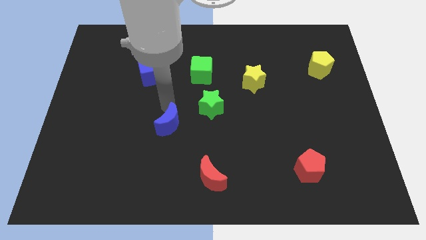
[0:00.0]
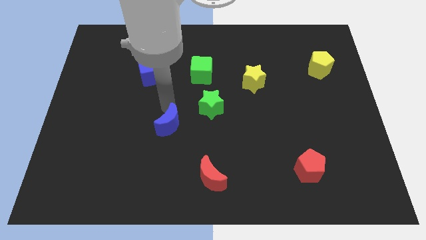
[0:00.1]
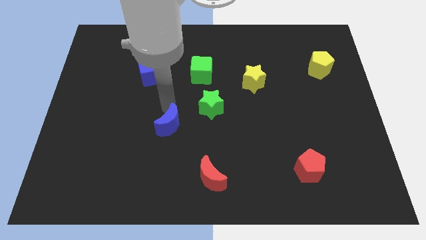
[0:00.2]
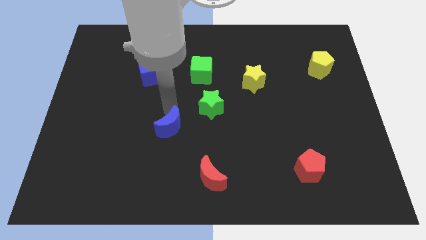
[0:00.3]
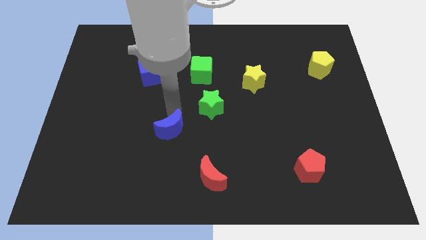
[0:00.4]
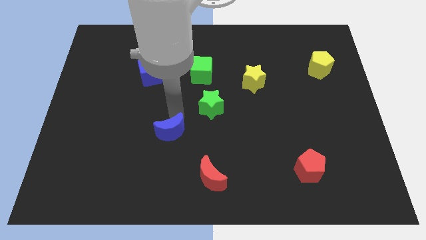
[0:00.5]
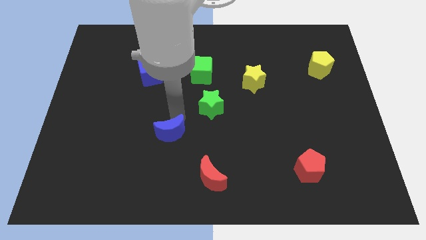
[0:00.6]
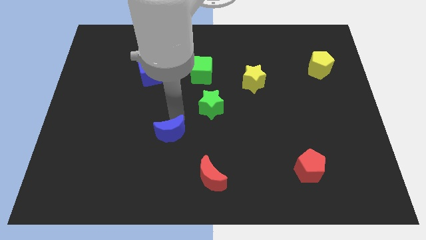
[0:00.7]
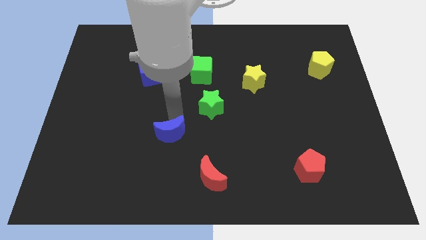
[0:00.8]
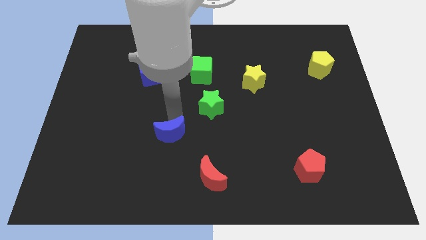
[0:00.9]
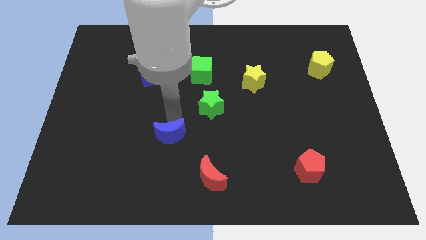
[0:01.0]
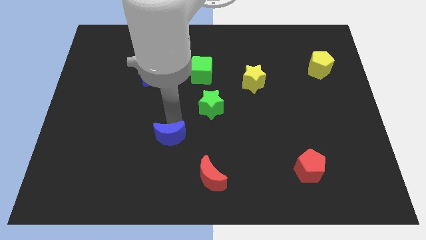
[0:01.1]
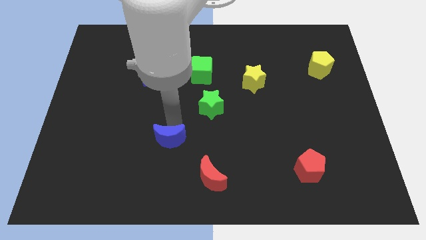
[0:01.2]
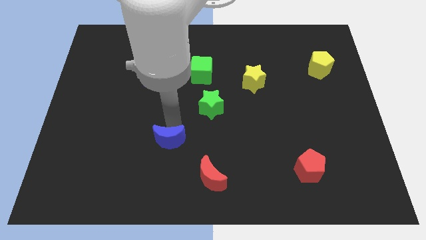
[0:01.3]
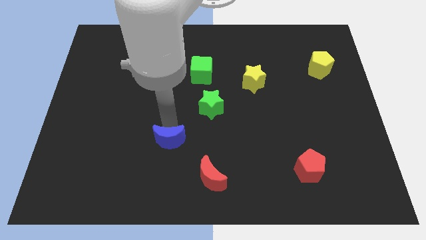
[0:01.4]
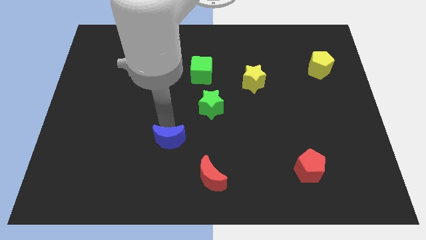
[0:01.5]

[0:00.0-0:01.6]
place the blue crescent diagonally to the red crescent

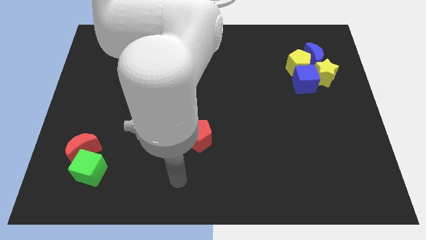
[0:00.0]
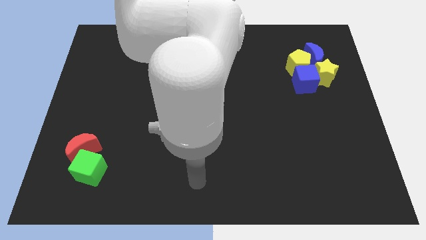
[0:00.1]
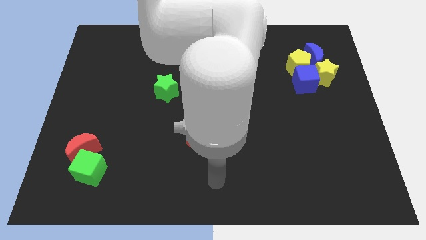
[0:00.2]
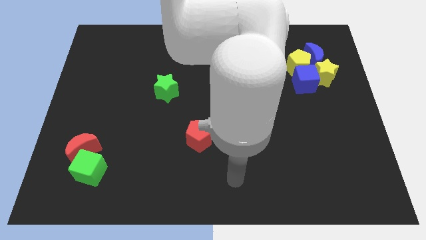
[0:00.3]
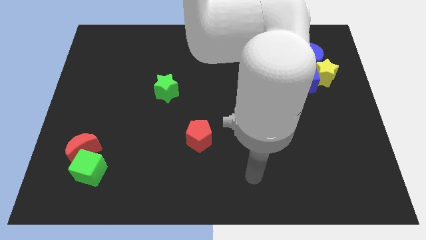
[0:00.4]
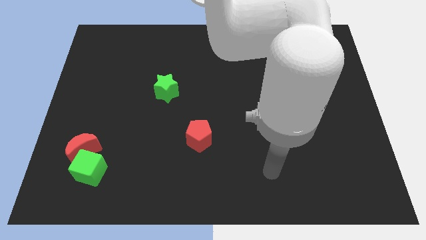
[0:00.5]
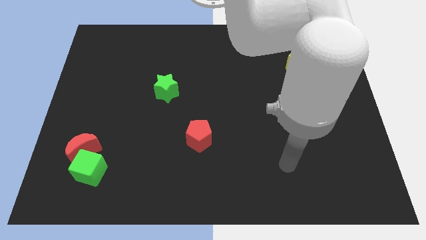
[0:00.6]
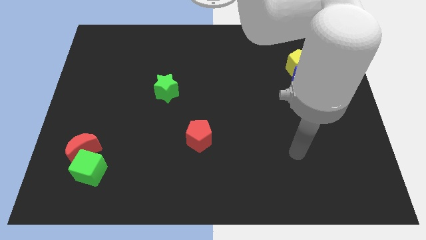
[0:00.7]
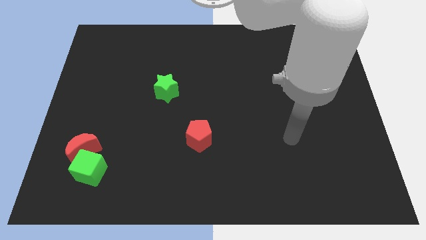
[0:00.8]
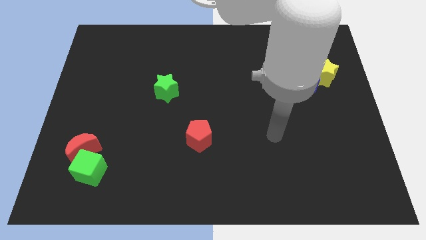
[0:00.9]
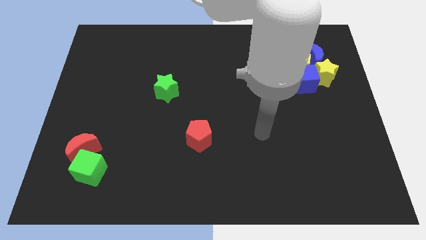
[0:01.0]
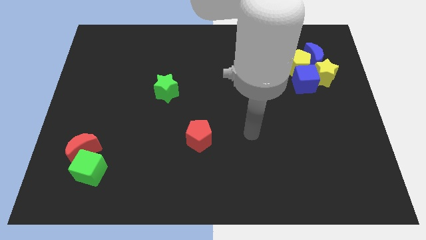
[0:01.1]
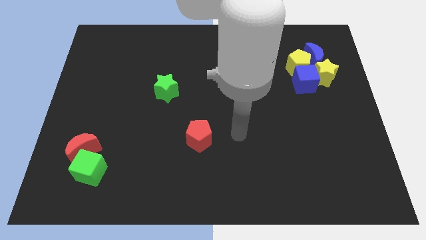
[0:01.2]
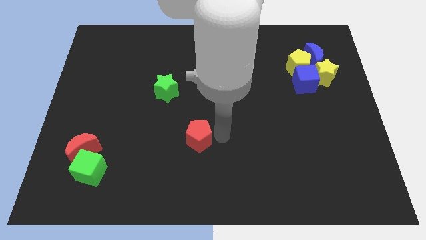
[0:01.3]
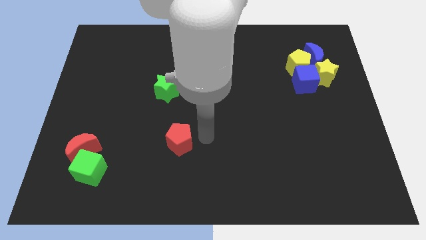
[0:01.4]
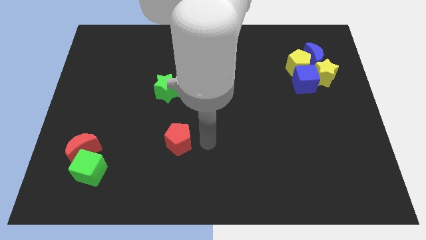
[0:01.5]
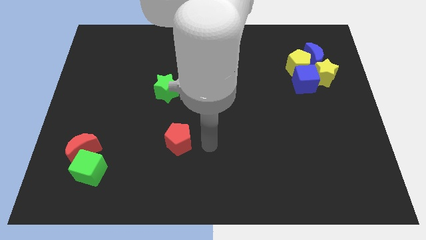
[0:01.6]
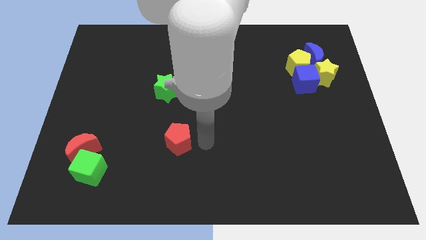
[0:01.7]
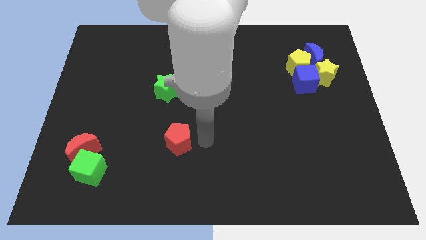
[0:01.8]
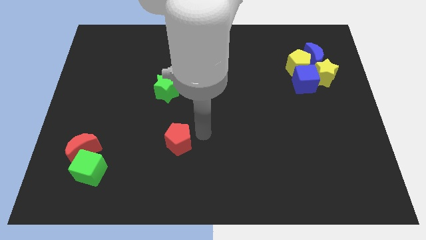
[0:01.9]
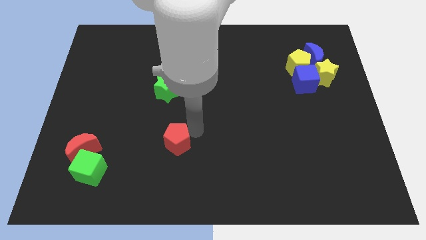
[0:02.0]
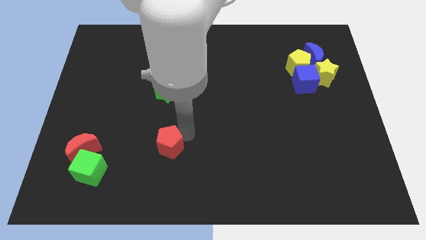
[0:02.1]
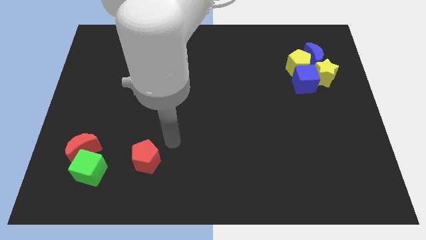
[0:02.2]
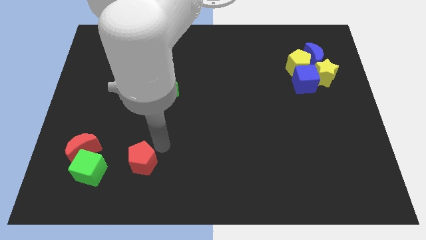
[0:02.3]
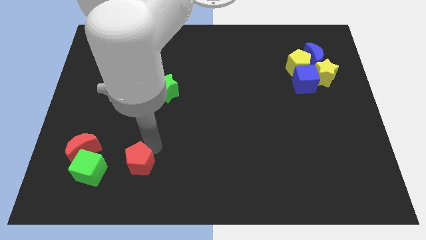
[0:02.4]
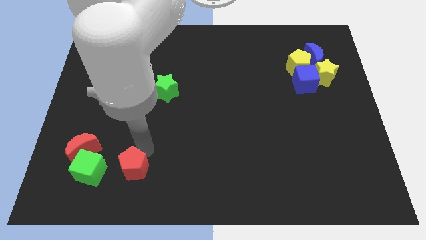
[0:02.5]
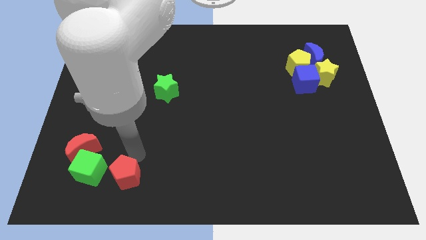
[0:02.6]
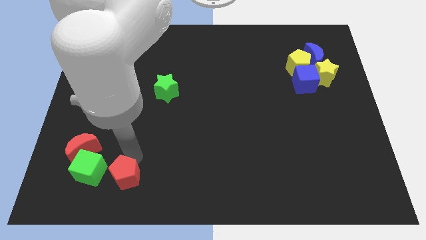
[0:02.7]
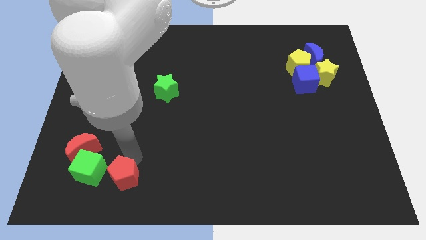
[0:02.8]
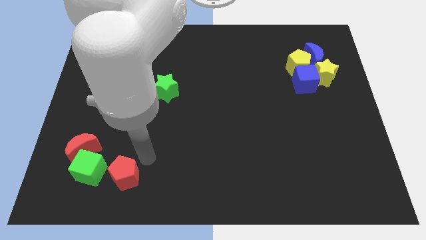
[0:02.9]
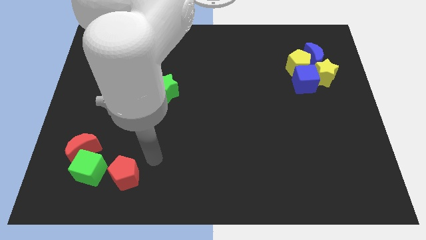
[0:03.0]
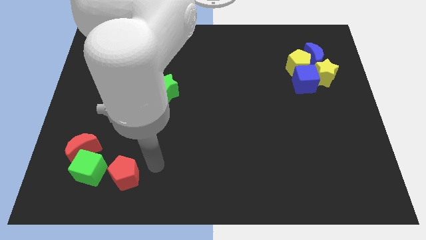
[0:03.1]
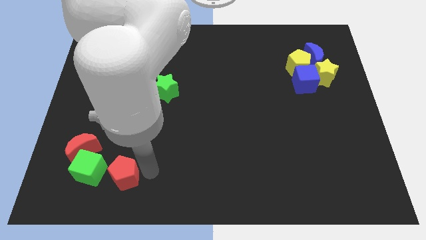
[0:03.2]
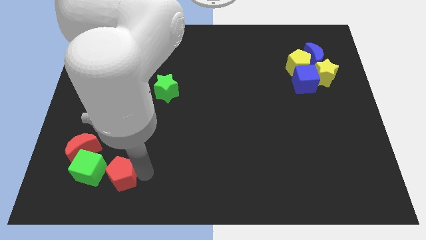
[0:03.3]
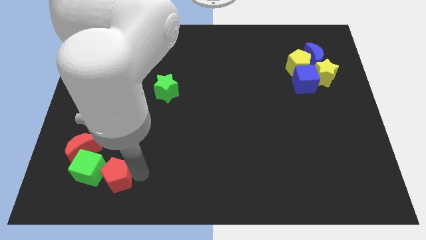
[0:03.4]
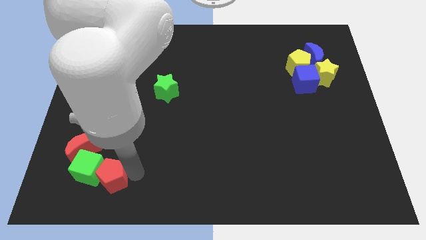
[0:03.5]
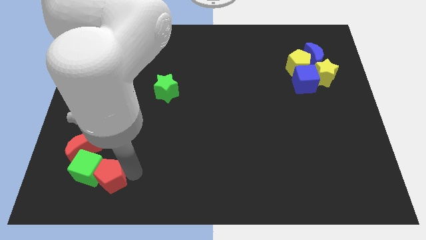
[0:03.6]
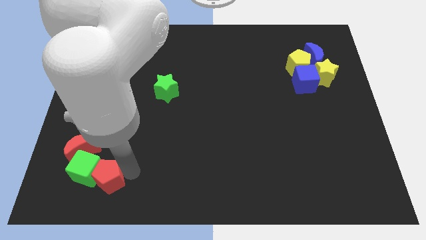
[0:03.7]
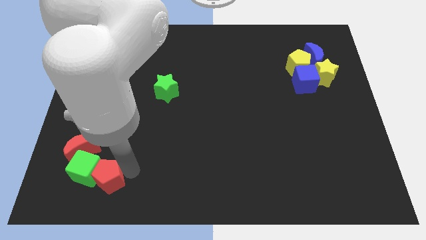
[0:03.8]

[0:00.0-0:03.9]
push the red pentagon into the green cube

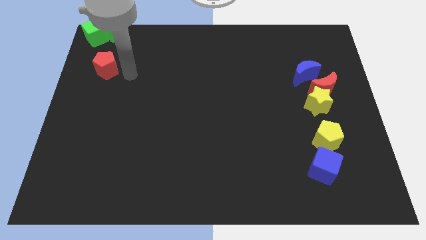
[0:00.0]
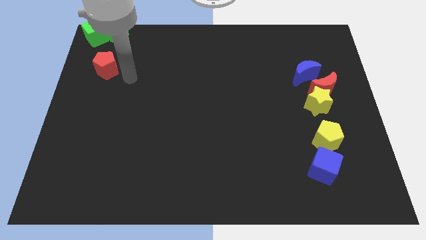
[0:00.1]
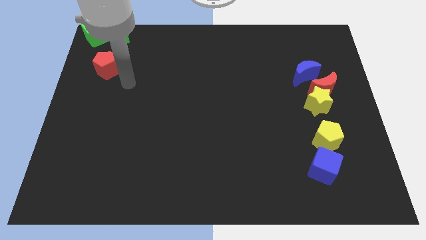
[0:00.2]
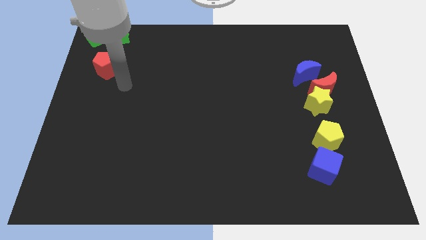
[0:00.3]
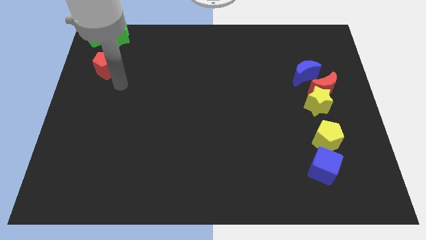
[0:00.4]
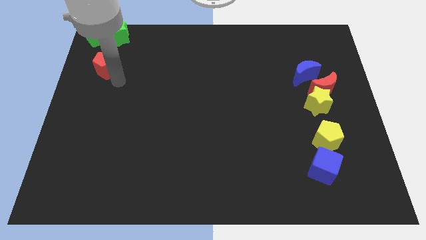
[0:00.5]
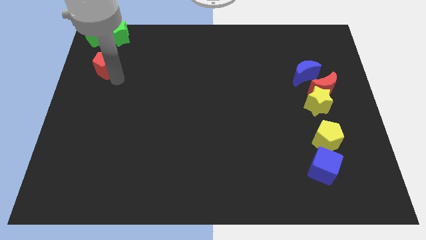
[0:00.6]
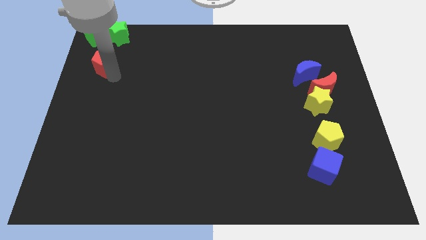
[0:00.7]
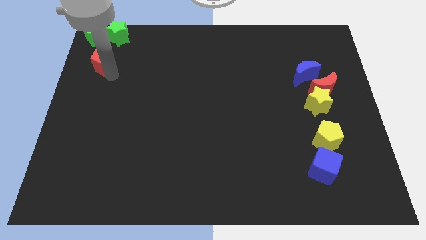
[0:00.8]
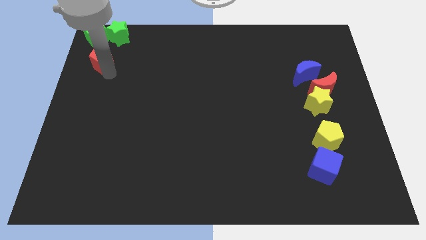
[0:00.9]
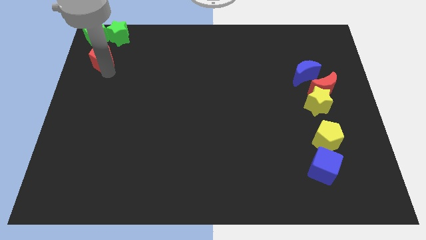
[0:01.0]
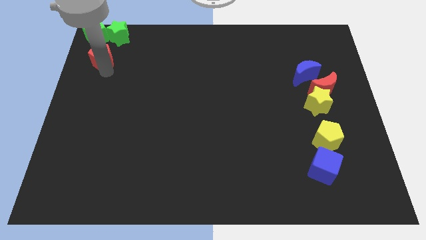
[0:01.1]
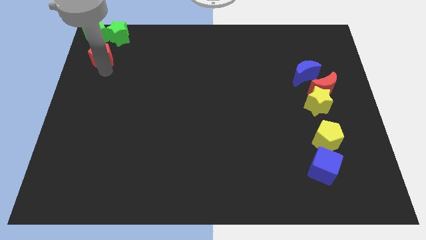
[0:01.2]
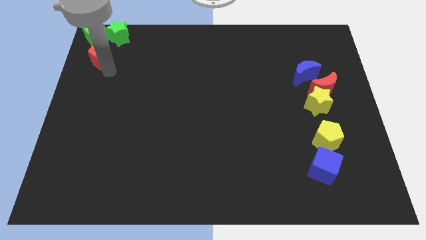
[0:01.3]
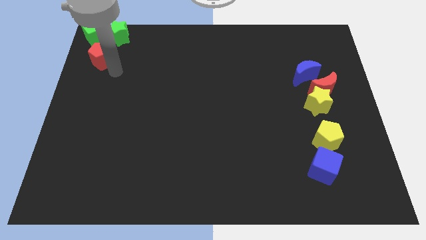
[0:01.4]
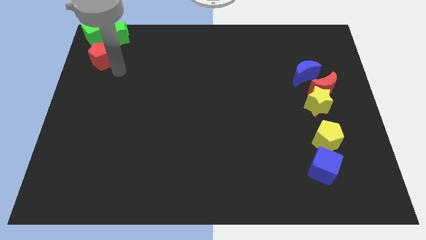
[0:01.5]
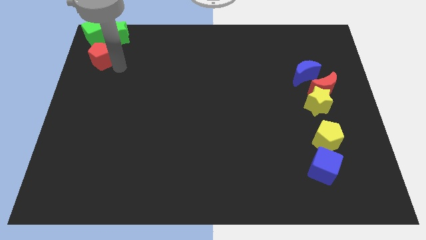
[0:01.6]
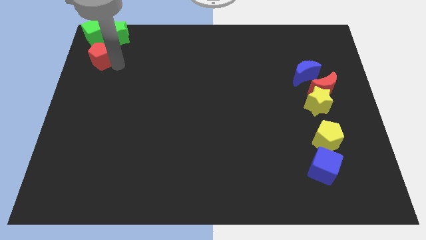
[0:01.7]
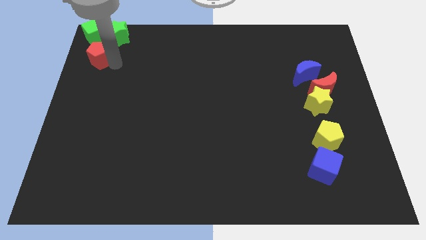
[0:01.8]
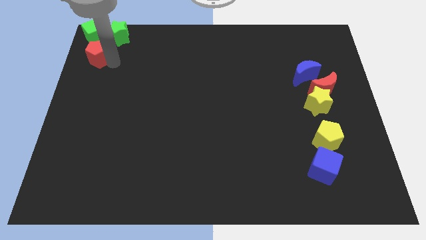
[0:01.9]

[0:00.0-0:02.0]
move the red pentagon towards the top left corner of the board

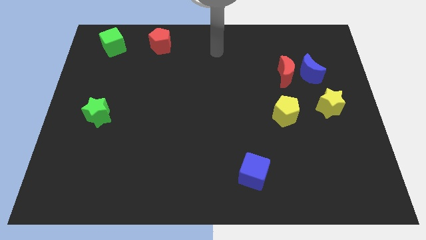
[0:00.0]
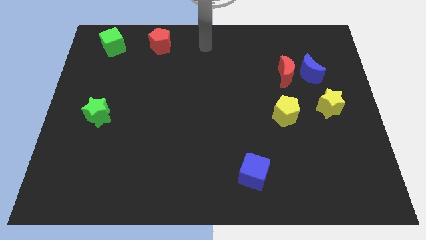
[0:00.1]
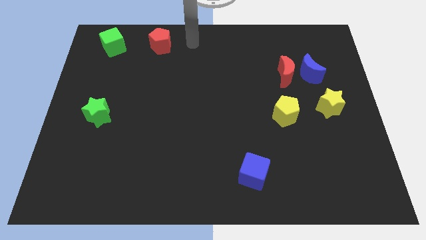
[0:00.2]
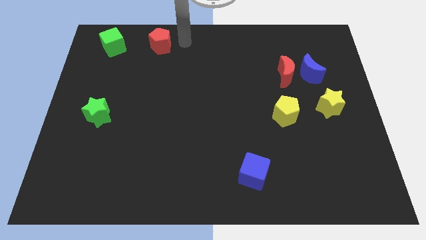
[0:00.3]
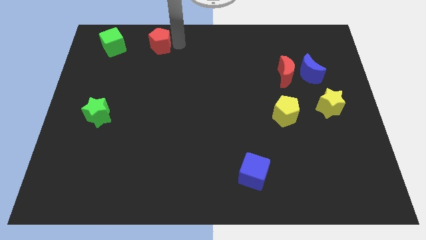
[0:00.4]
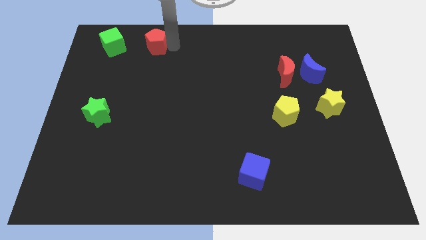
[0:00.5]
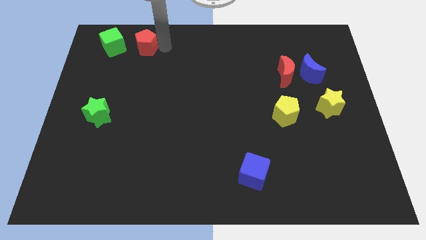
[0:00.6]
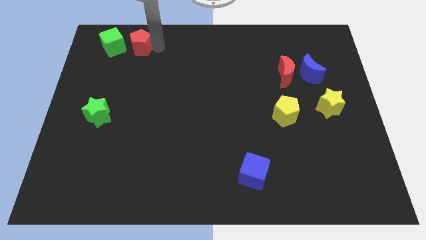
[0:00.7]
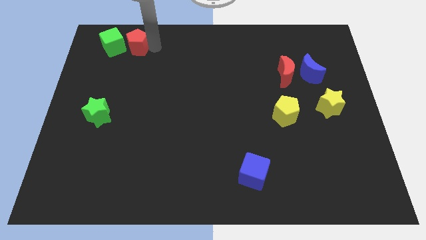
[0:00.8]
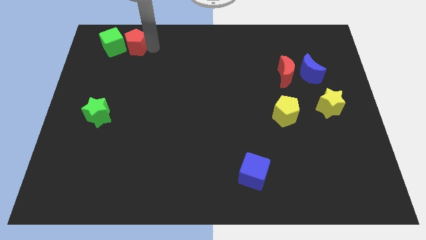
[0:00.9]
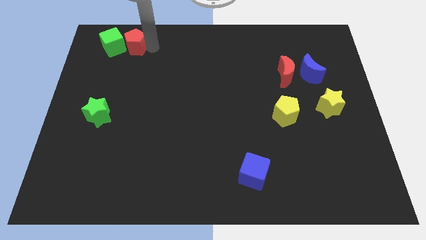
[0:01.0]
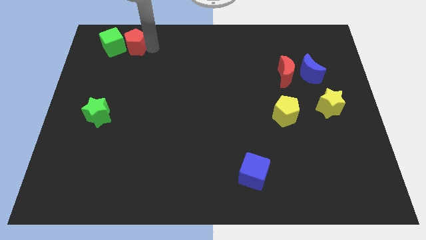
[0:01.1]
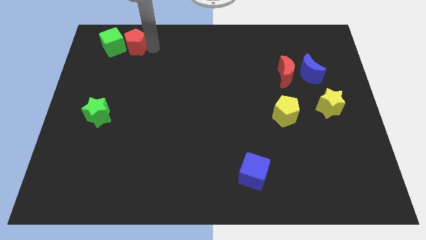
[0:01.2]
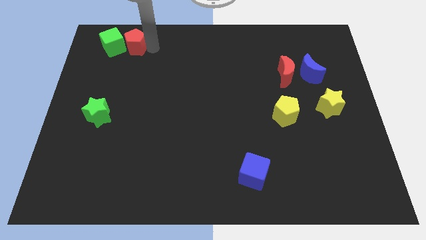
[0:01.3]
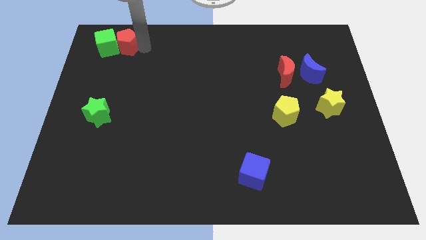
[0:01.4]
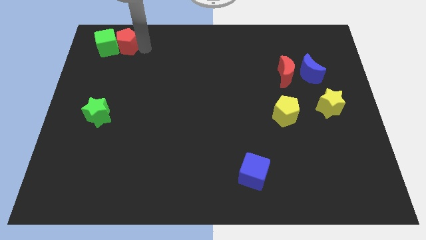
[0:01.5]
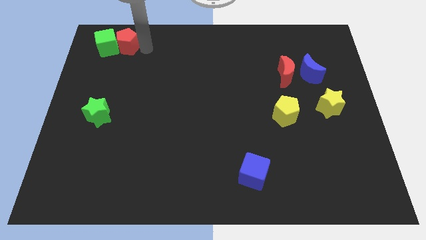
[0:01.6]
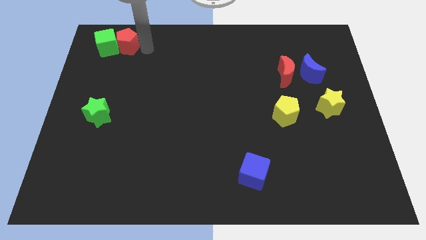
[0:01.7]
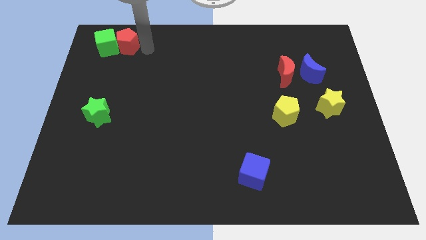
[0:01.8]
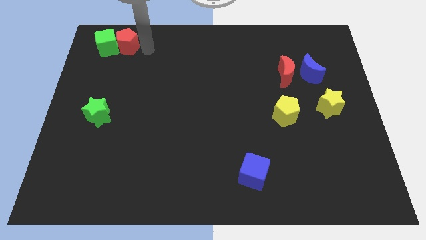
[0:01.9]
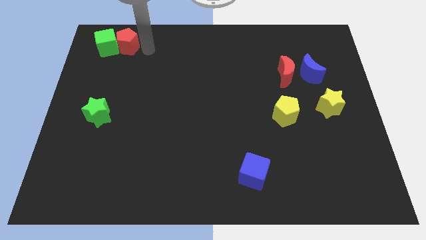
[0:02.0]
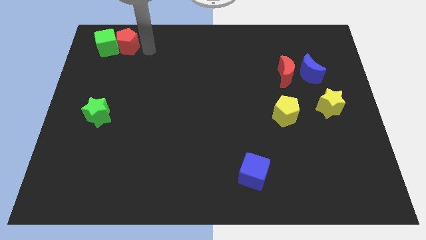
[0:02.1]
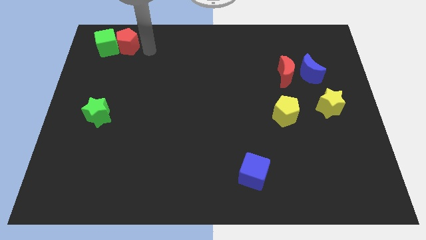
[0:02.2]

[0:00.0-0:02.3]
move red pentagon close to the green block
